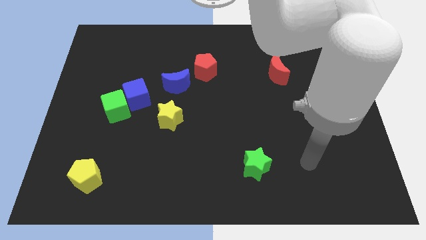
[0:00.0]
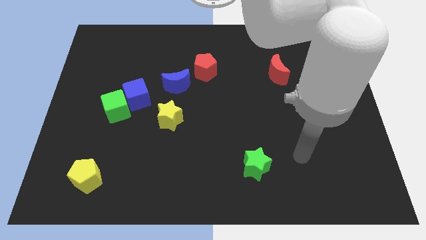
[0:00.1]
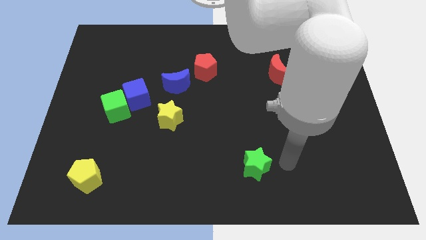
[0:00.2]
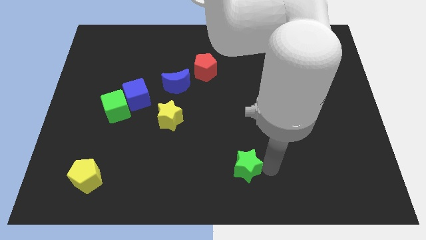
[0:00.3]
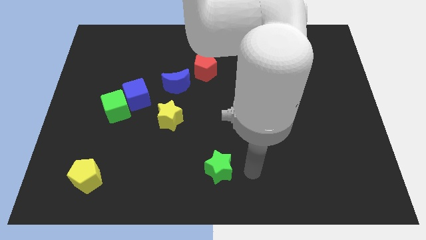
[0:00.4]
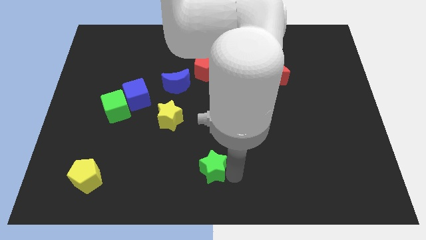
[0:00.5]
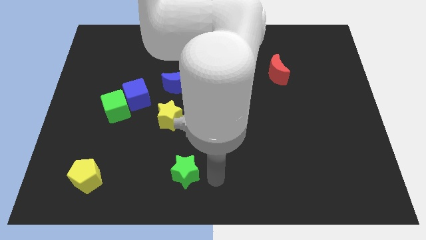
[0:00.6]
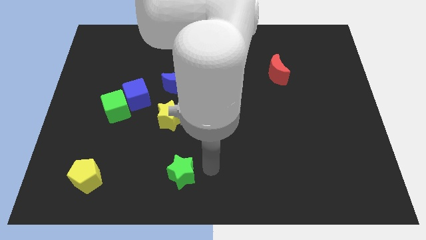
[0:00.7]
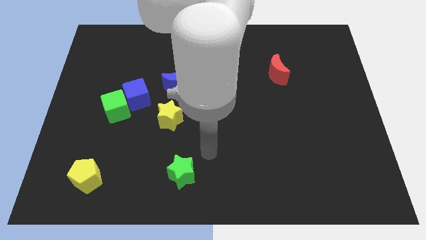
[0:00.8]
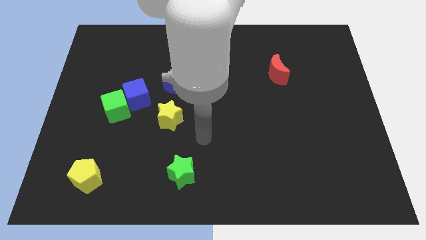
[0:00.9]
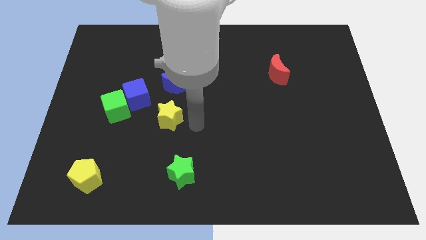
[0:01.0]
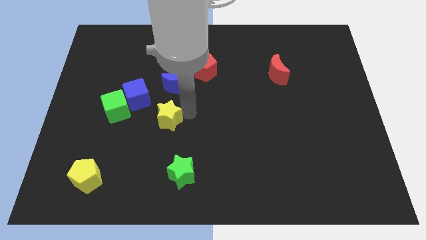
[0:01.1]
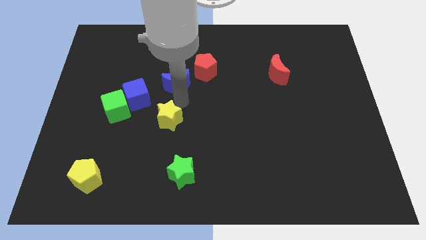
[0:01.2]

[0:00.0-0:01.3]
put the green star at the bottom side of the yellow star

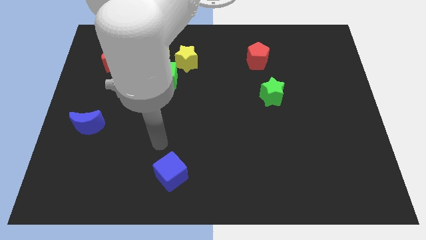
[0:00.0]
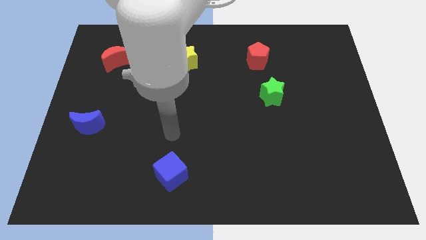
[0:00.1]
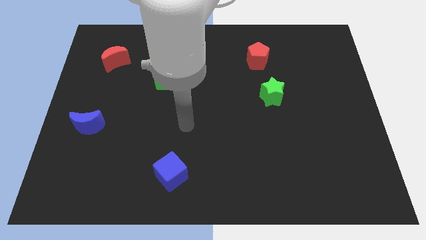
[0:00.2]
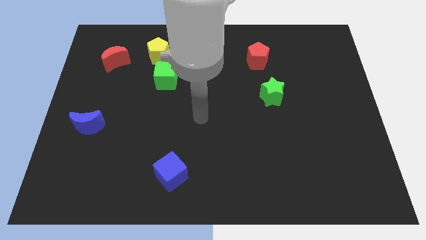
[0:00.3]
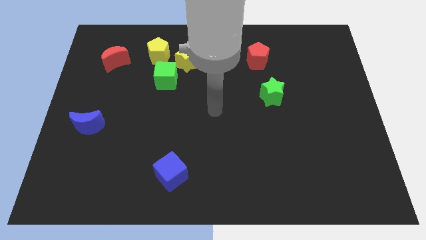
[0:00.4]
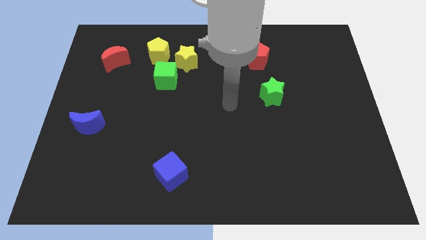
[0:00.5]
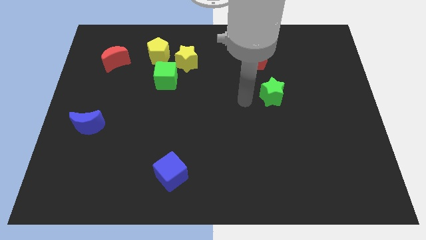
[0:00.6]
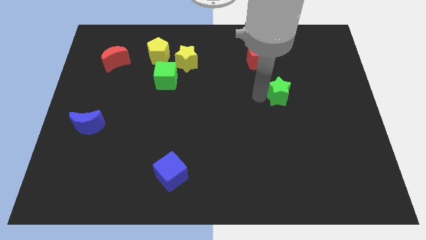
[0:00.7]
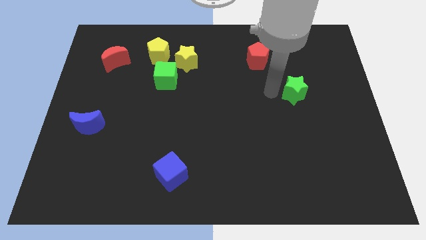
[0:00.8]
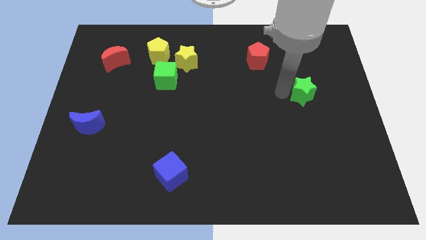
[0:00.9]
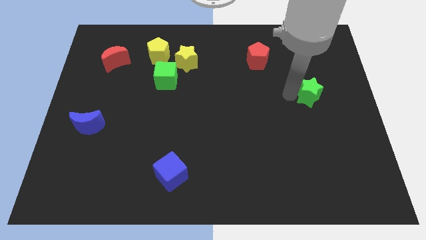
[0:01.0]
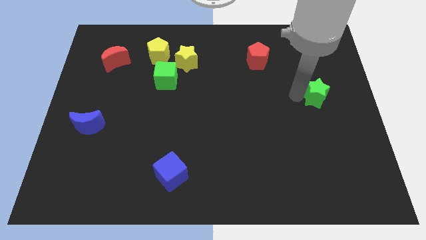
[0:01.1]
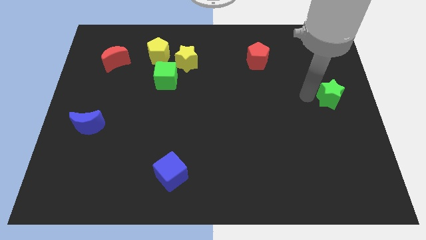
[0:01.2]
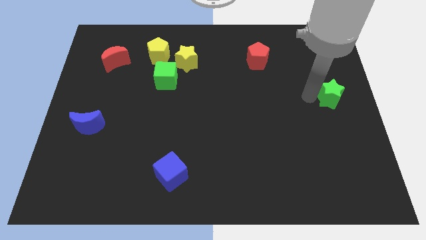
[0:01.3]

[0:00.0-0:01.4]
push the green star slightly to the right

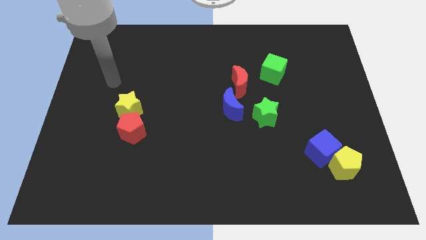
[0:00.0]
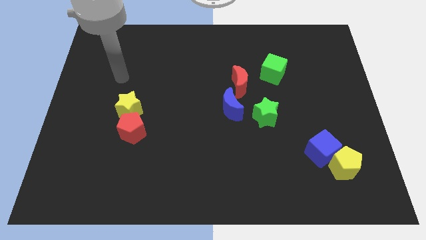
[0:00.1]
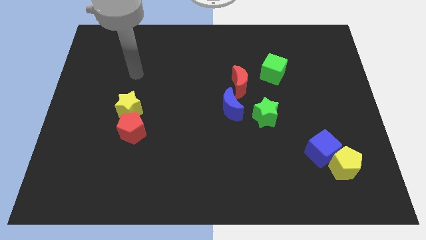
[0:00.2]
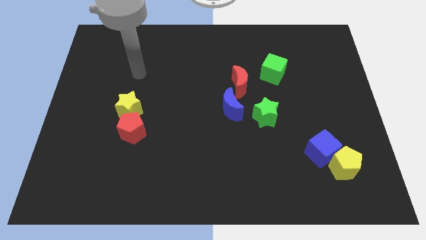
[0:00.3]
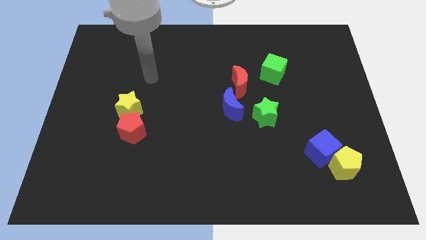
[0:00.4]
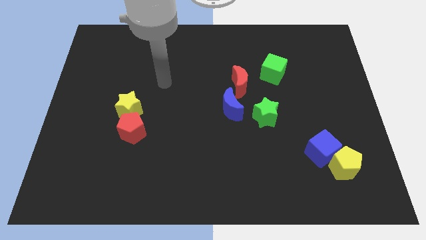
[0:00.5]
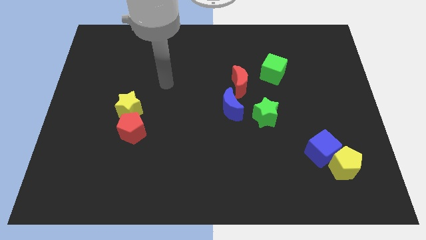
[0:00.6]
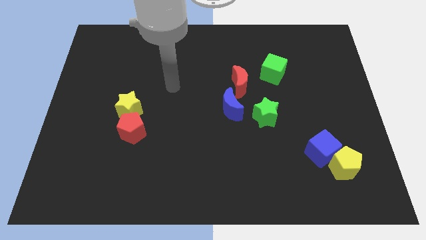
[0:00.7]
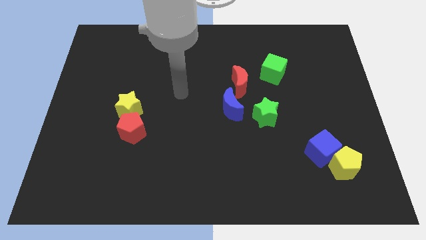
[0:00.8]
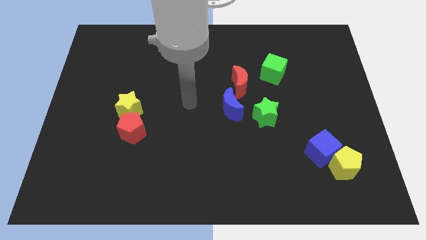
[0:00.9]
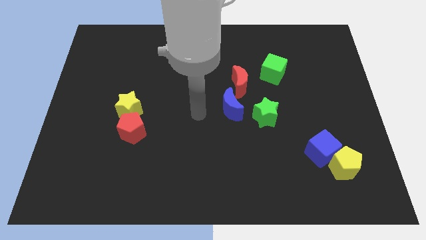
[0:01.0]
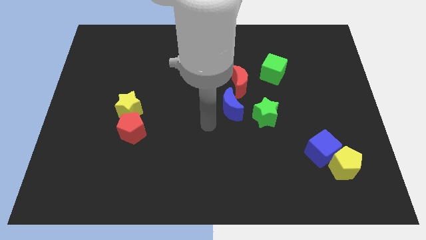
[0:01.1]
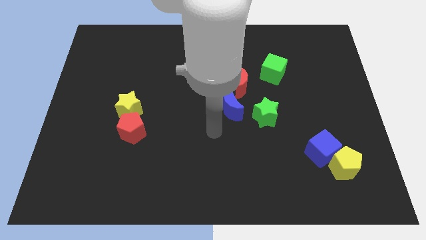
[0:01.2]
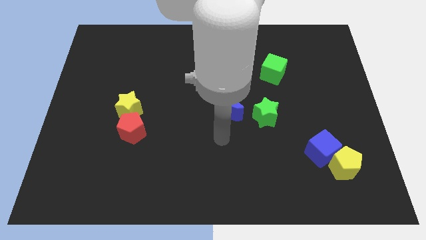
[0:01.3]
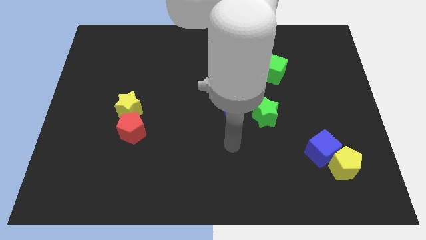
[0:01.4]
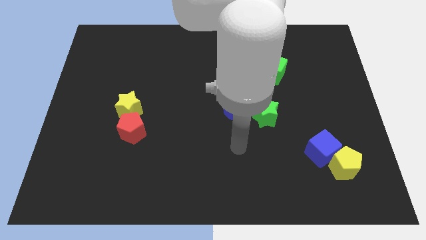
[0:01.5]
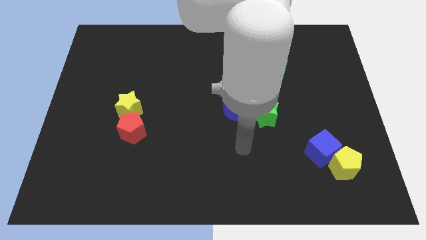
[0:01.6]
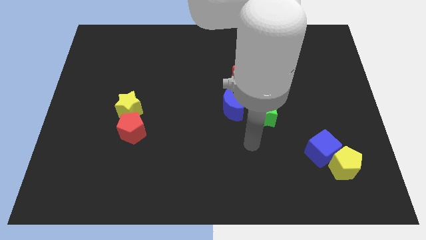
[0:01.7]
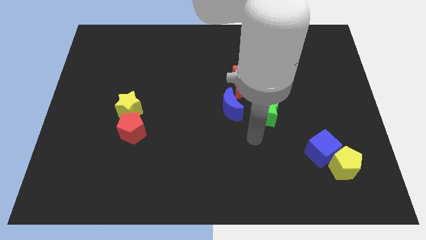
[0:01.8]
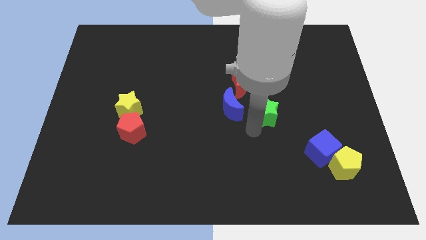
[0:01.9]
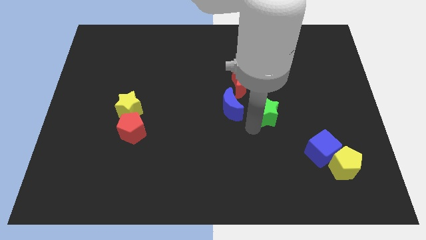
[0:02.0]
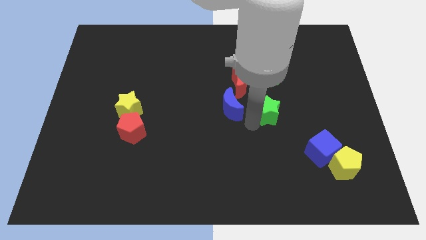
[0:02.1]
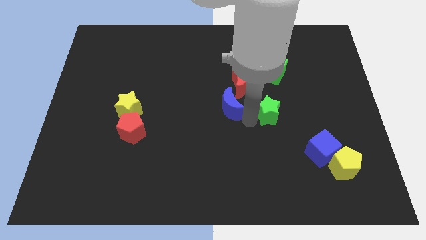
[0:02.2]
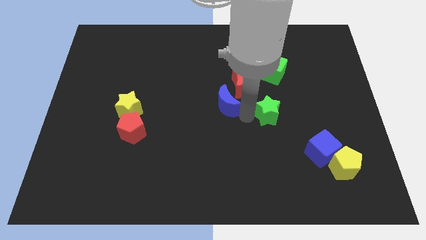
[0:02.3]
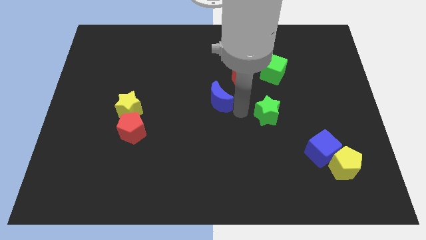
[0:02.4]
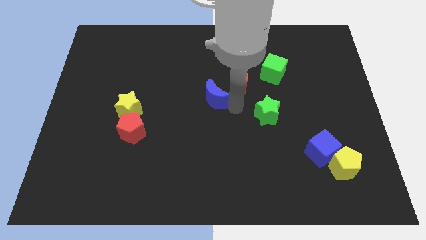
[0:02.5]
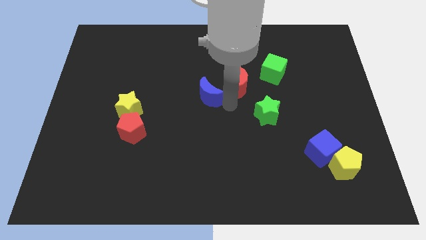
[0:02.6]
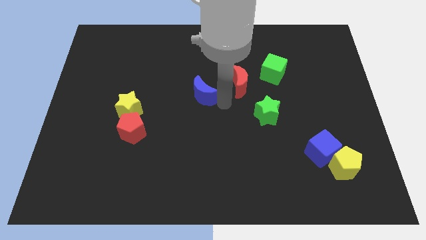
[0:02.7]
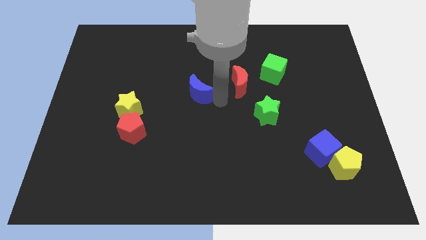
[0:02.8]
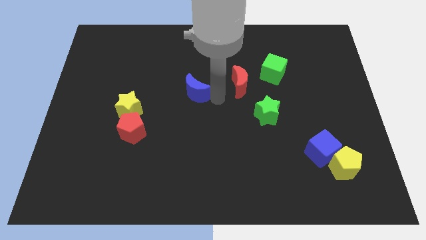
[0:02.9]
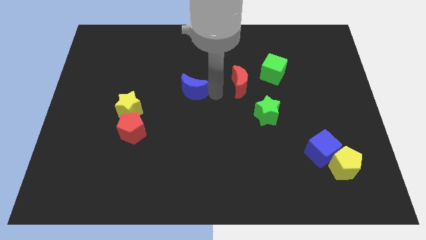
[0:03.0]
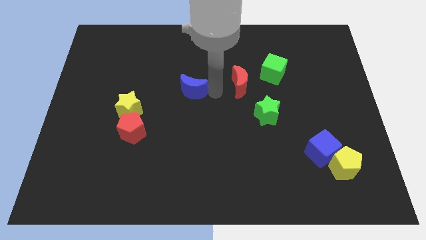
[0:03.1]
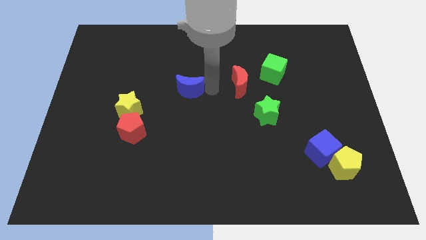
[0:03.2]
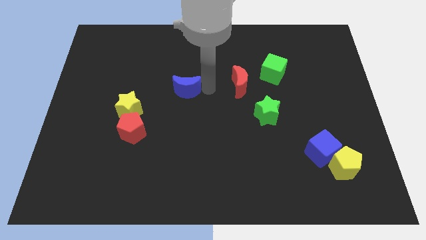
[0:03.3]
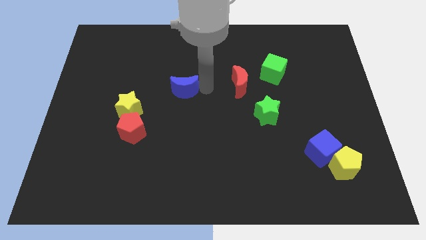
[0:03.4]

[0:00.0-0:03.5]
move the blue crescent to the top of the board

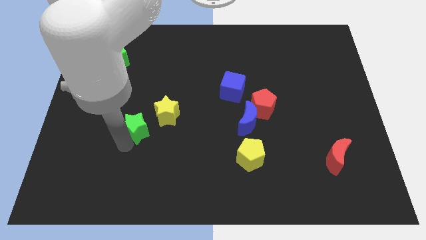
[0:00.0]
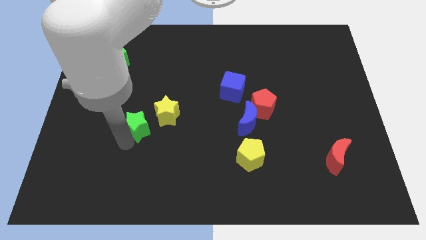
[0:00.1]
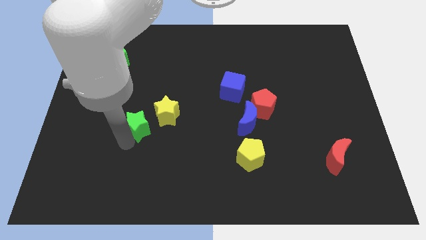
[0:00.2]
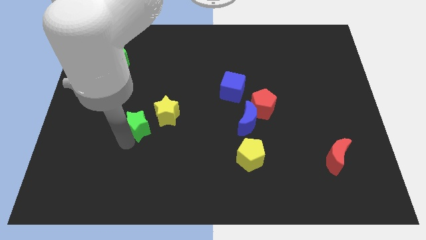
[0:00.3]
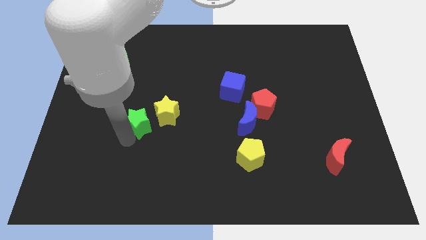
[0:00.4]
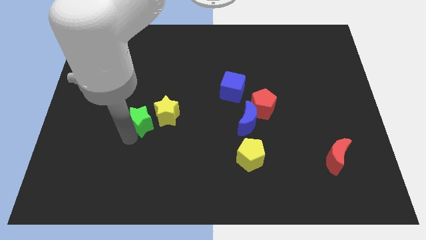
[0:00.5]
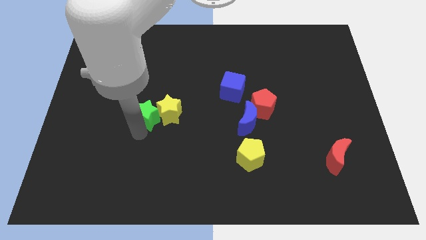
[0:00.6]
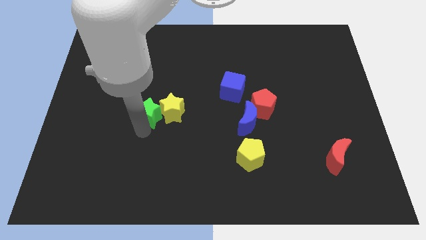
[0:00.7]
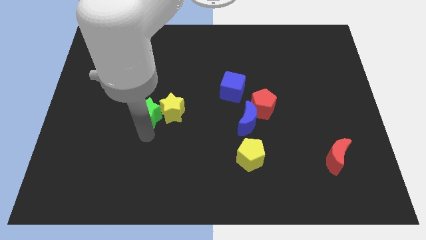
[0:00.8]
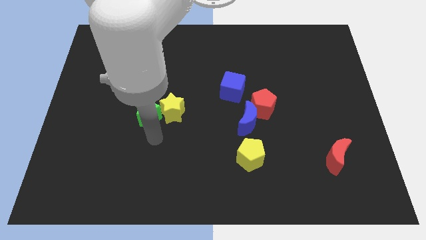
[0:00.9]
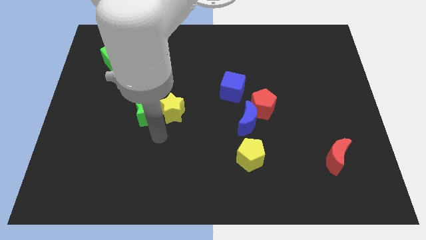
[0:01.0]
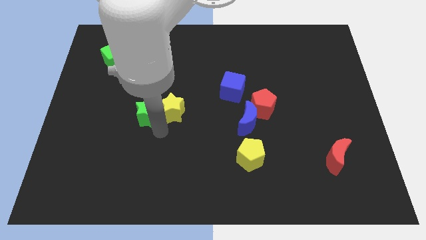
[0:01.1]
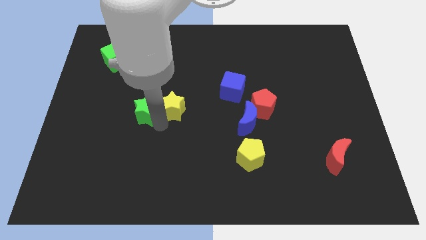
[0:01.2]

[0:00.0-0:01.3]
place the green star to the left of the yellow star

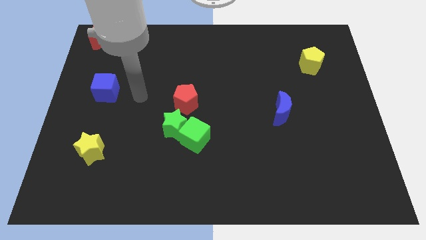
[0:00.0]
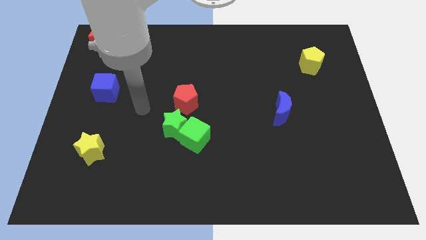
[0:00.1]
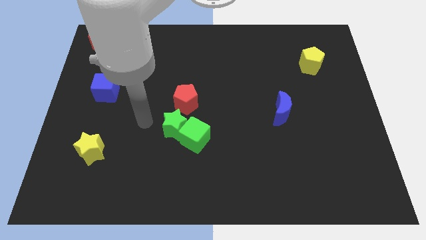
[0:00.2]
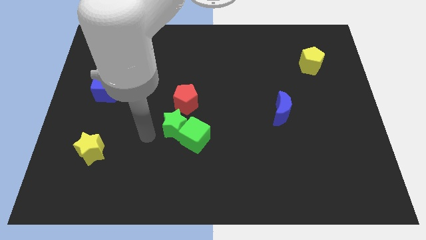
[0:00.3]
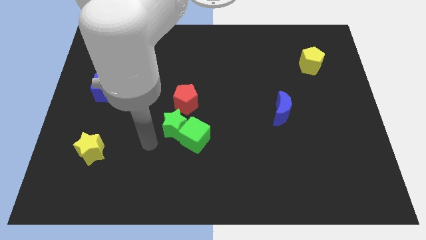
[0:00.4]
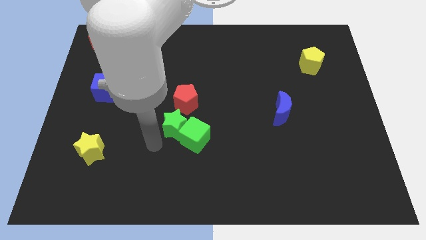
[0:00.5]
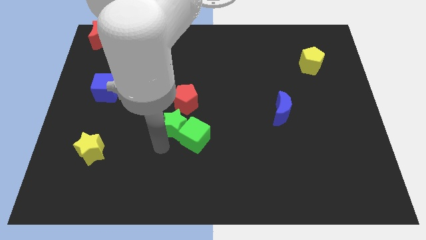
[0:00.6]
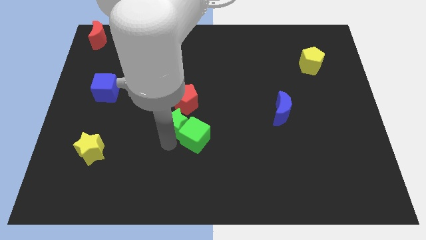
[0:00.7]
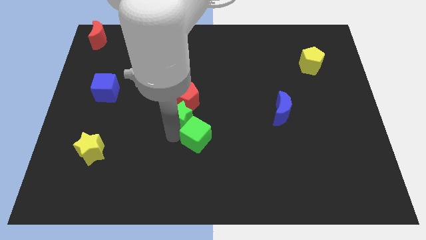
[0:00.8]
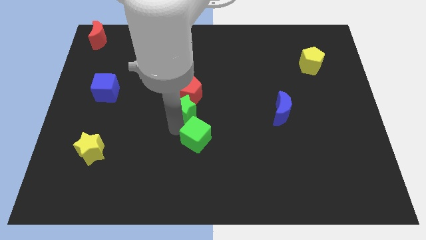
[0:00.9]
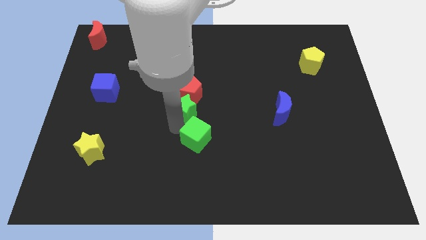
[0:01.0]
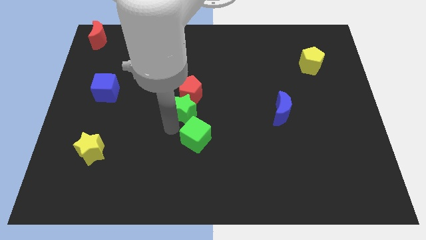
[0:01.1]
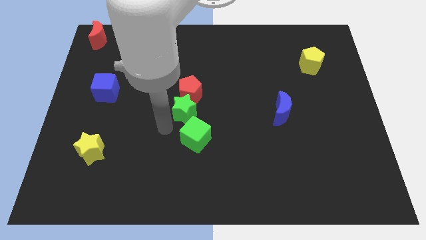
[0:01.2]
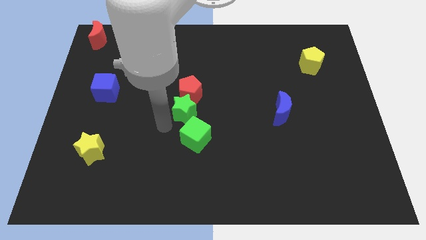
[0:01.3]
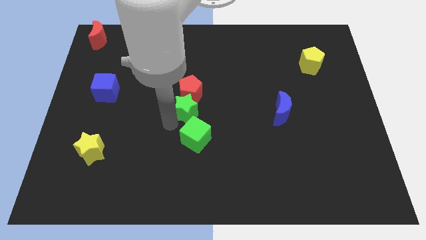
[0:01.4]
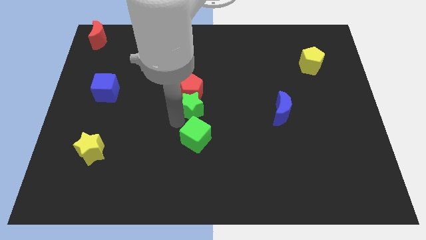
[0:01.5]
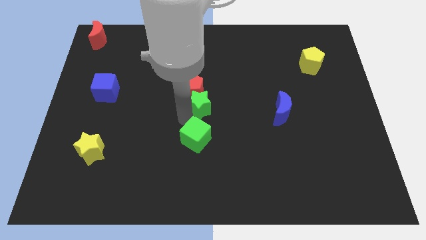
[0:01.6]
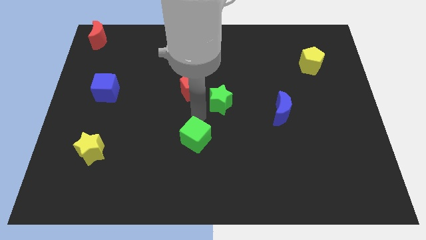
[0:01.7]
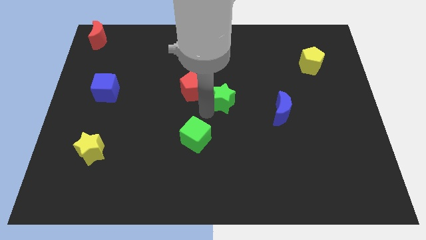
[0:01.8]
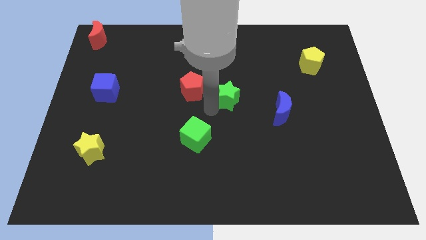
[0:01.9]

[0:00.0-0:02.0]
separate the green star and the green cube
